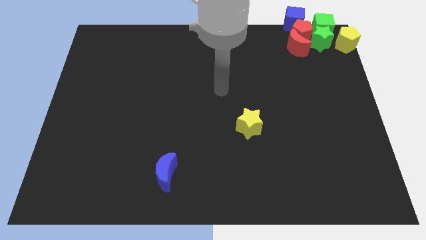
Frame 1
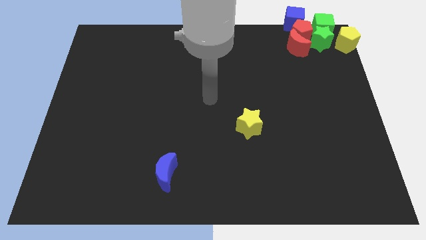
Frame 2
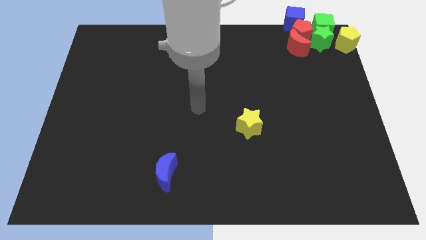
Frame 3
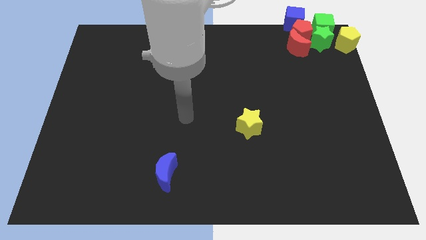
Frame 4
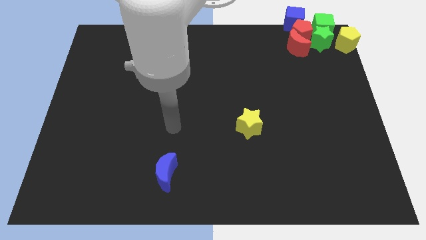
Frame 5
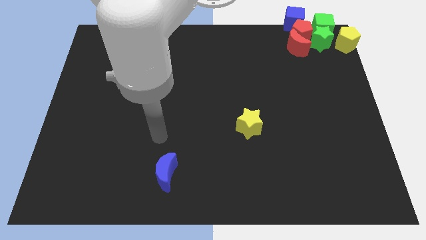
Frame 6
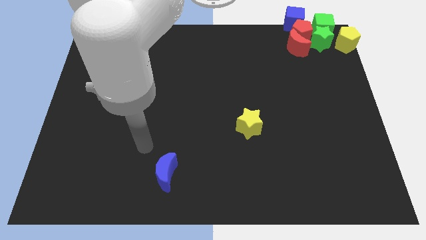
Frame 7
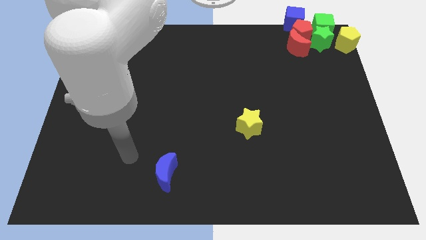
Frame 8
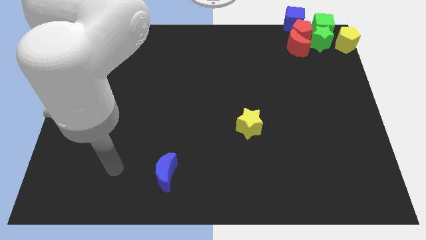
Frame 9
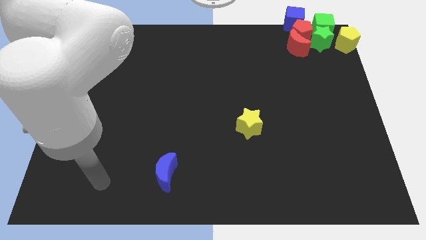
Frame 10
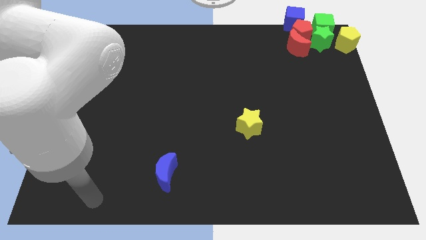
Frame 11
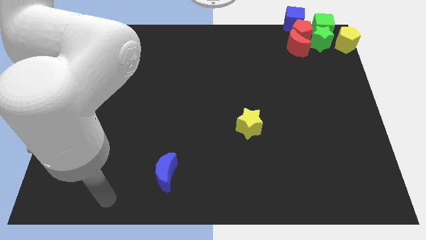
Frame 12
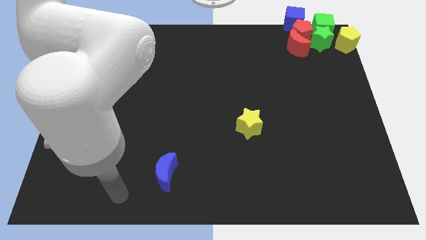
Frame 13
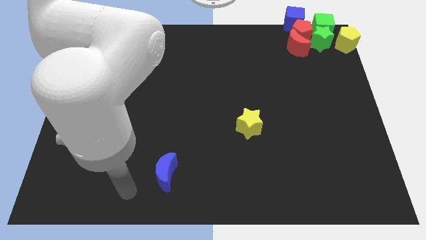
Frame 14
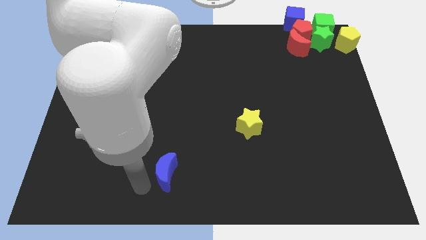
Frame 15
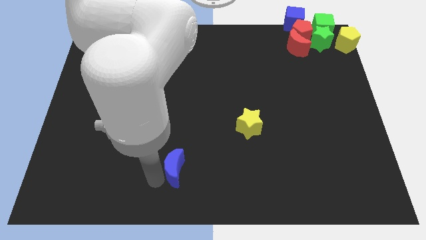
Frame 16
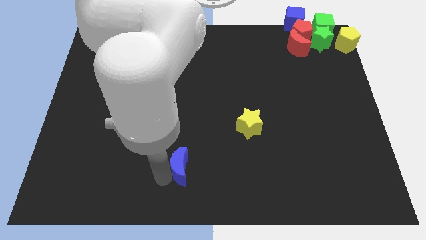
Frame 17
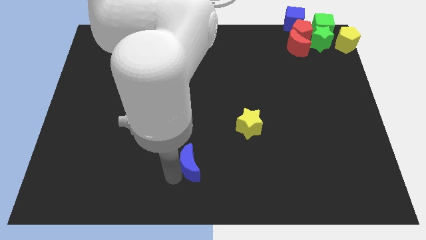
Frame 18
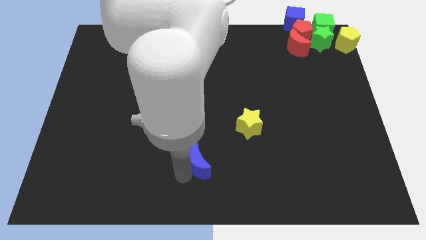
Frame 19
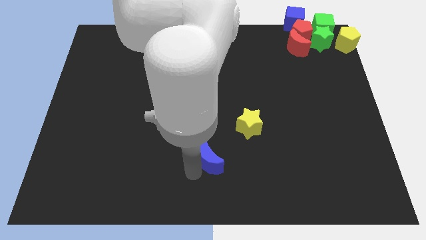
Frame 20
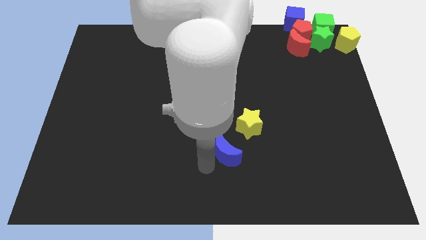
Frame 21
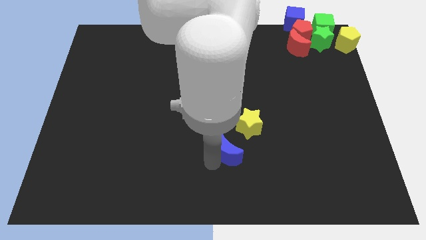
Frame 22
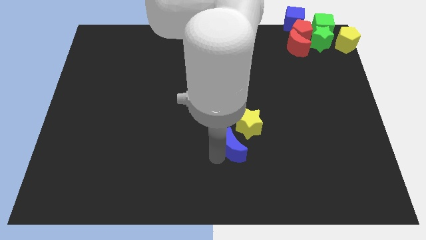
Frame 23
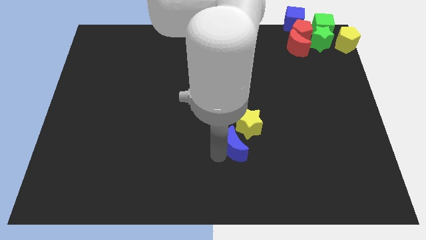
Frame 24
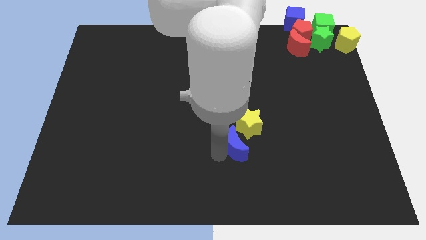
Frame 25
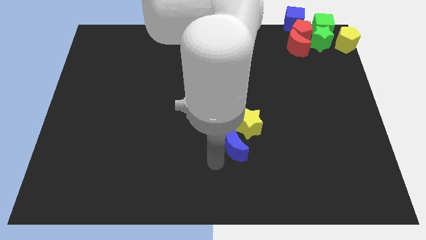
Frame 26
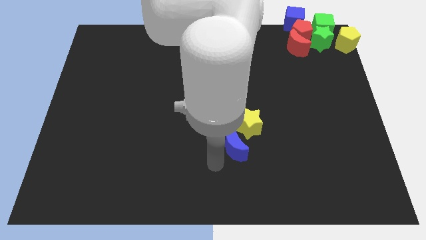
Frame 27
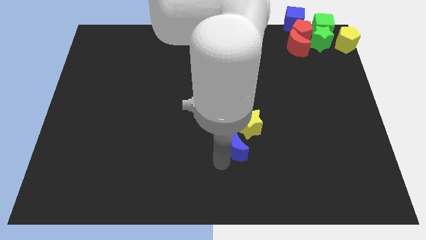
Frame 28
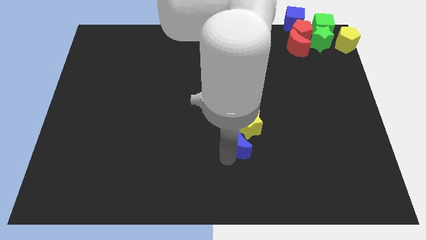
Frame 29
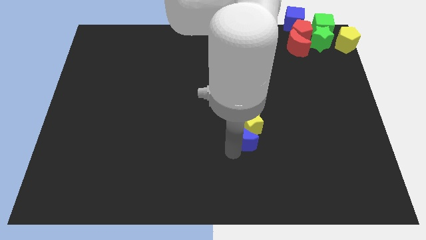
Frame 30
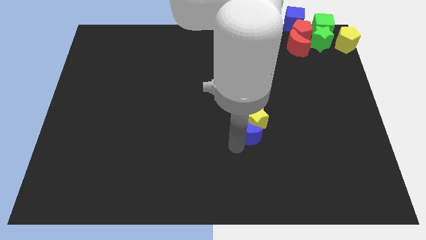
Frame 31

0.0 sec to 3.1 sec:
move the blue crescent to the bottom left of the yellow star

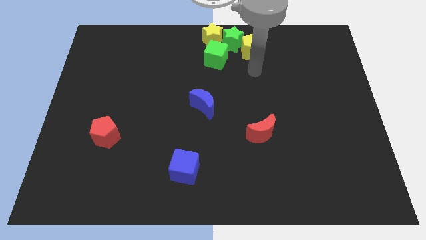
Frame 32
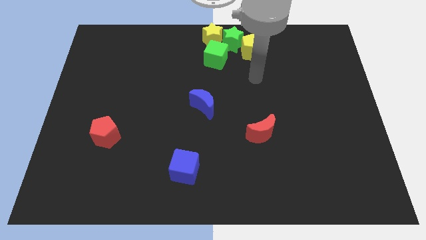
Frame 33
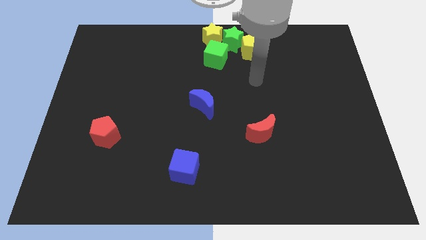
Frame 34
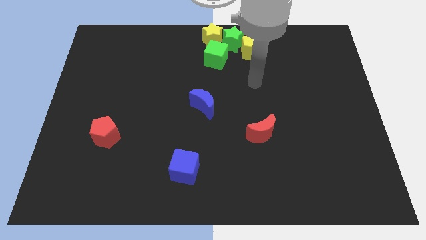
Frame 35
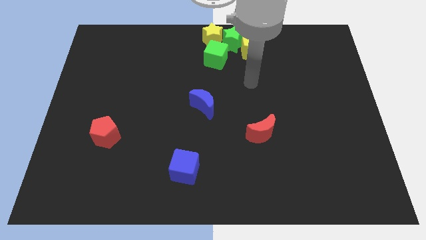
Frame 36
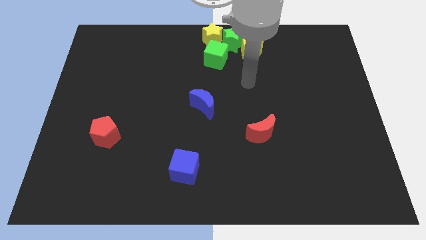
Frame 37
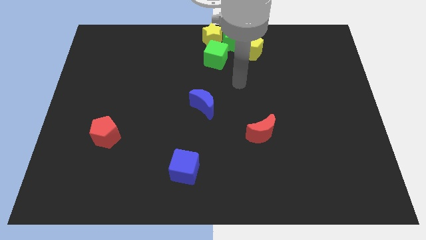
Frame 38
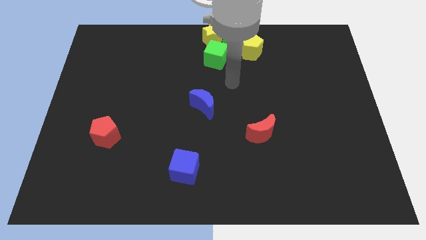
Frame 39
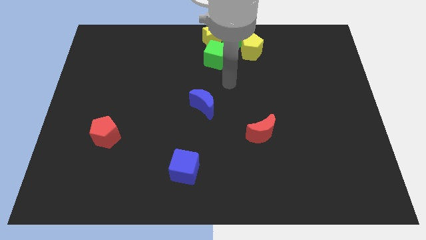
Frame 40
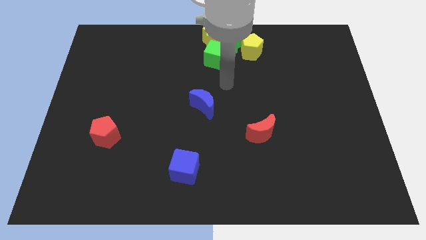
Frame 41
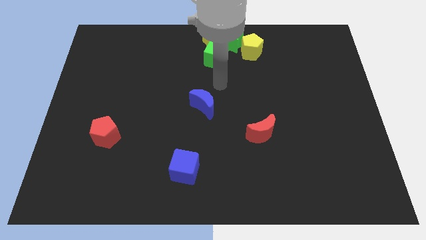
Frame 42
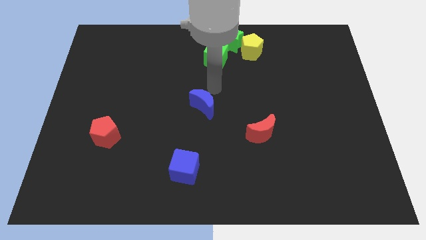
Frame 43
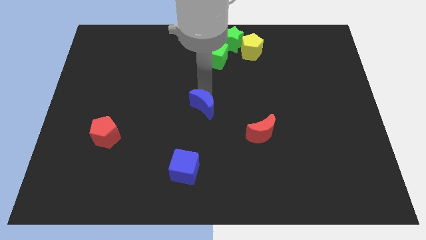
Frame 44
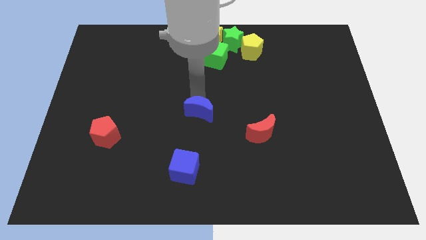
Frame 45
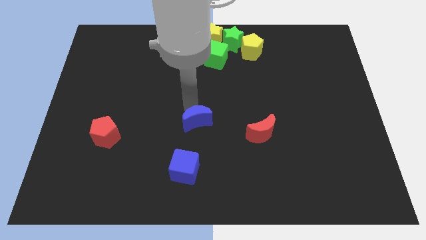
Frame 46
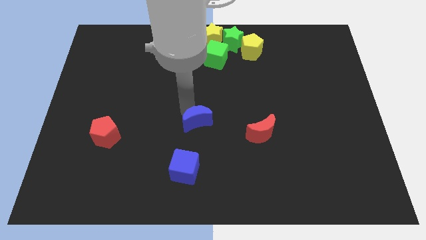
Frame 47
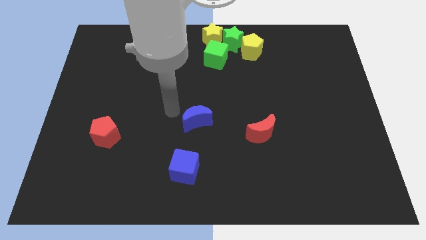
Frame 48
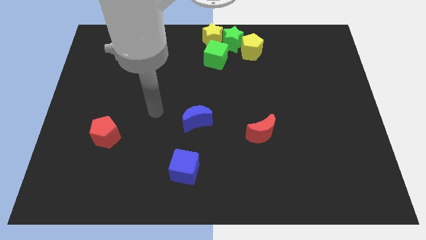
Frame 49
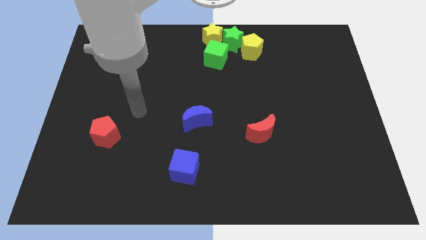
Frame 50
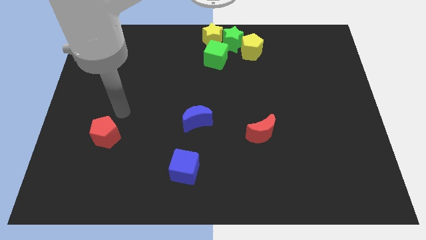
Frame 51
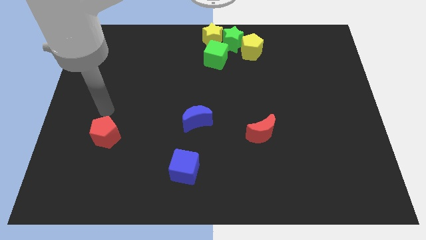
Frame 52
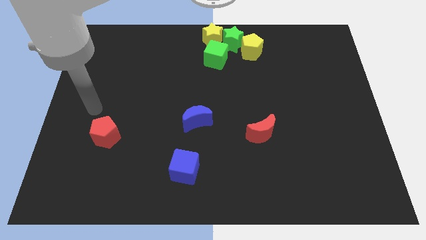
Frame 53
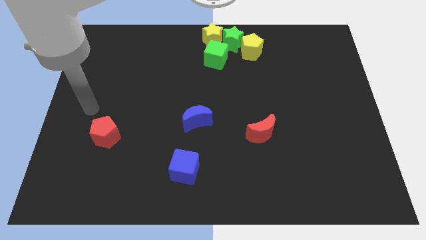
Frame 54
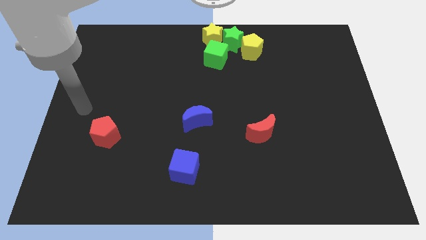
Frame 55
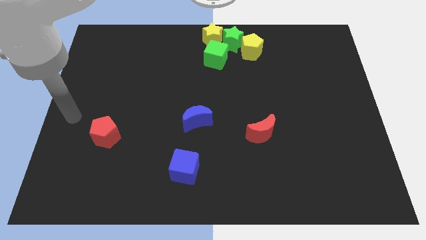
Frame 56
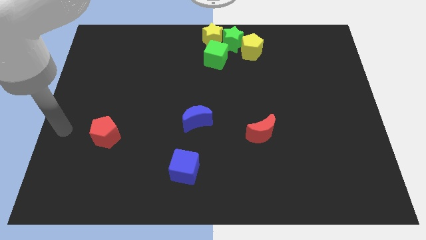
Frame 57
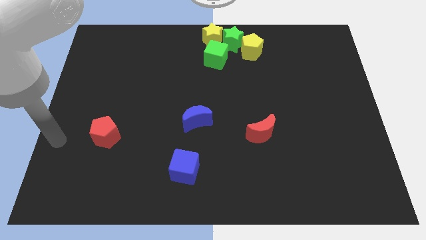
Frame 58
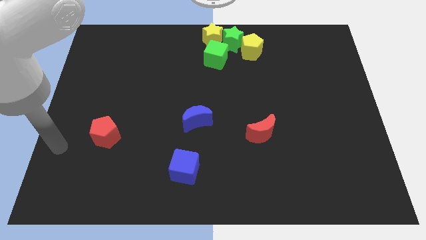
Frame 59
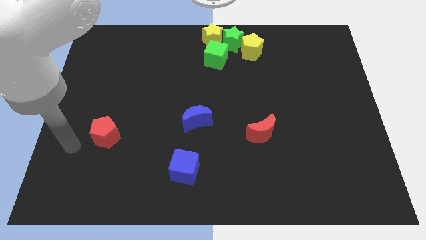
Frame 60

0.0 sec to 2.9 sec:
push the blue crescent slightly to the center of the board

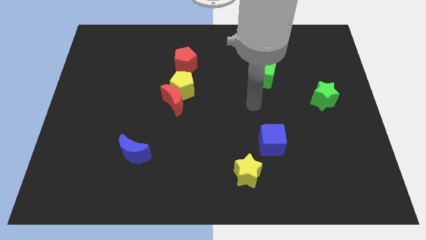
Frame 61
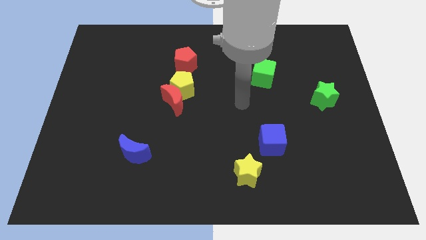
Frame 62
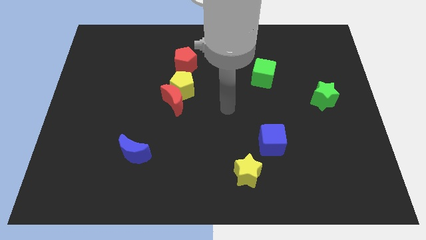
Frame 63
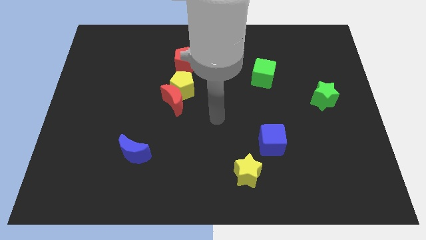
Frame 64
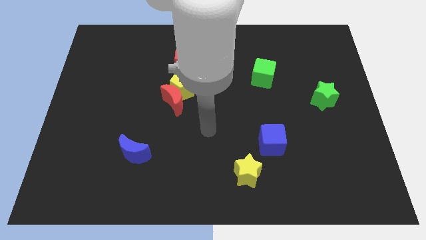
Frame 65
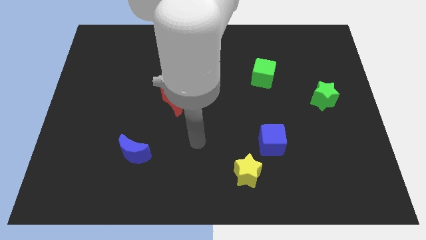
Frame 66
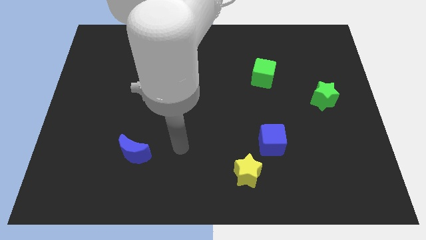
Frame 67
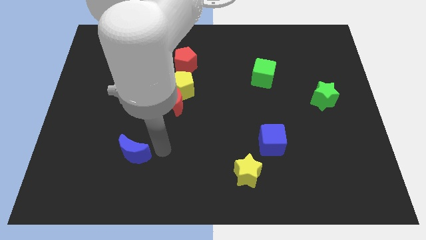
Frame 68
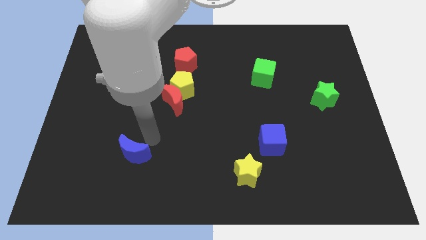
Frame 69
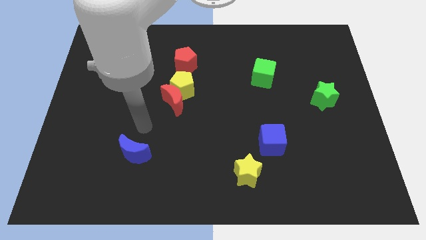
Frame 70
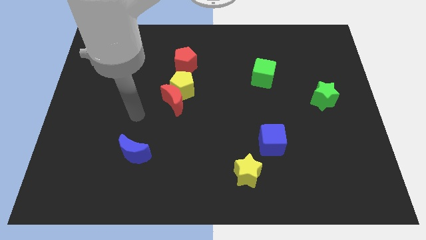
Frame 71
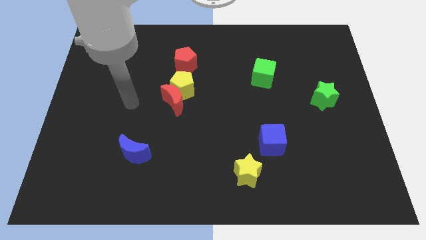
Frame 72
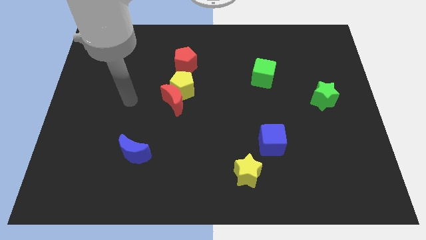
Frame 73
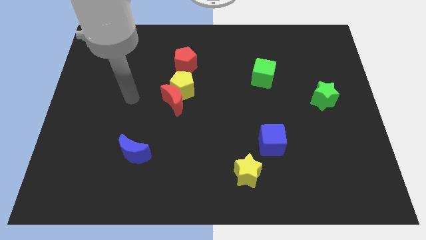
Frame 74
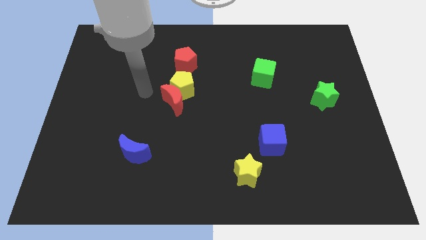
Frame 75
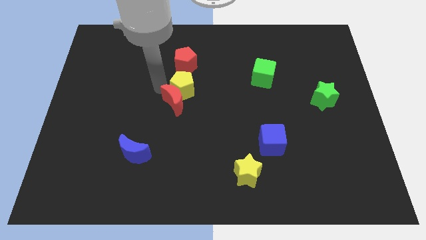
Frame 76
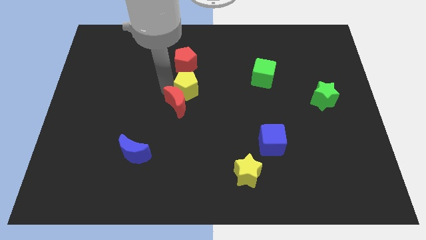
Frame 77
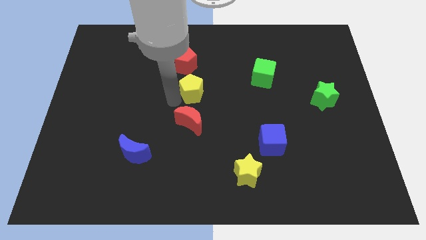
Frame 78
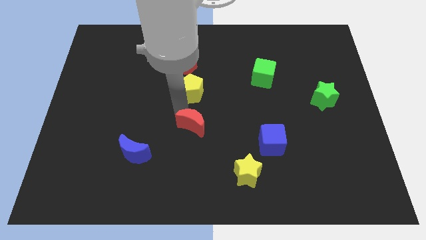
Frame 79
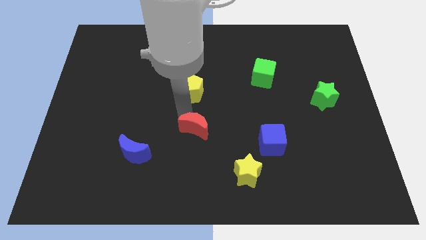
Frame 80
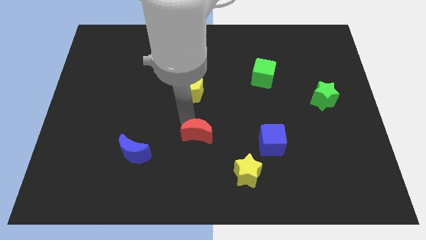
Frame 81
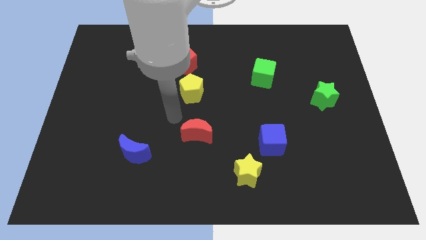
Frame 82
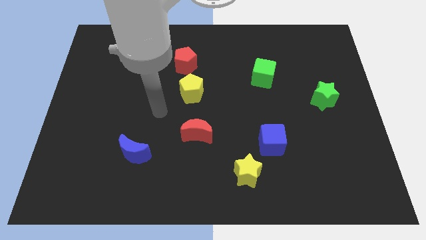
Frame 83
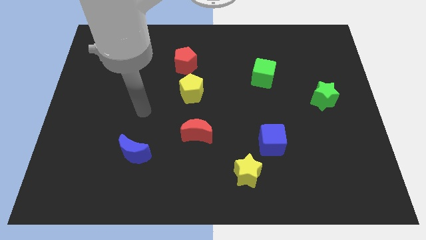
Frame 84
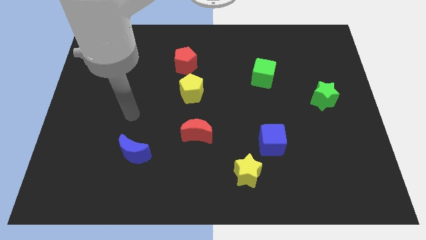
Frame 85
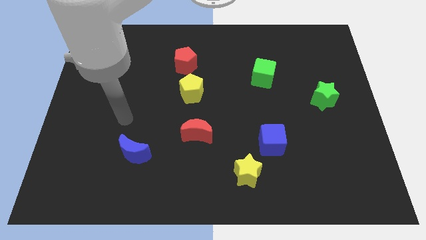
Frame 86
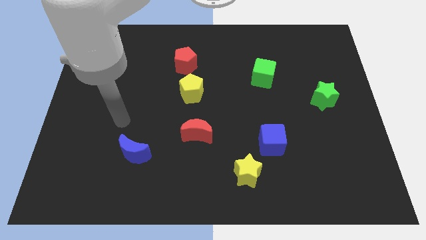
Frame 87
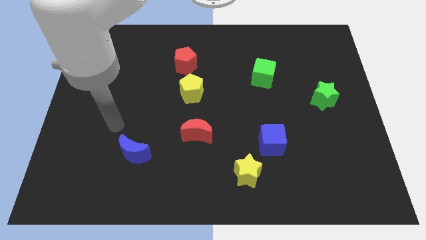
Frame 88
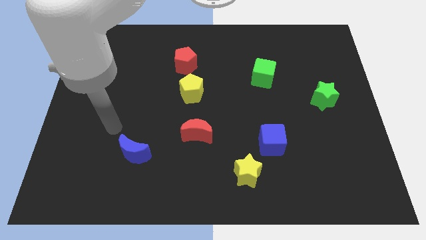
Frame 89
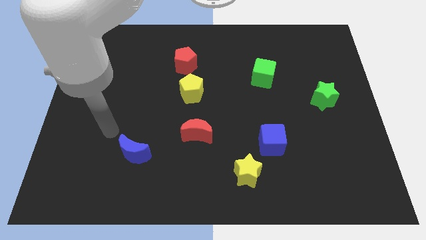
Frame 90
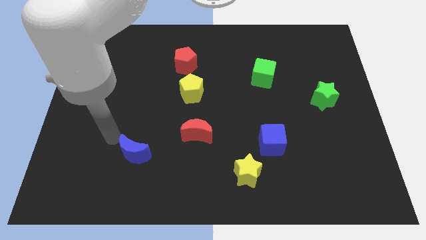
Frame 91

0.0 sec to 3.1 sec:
place the red crescent to the left of the blue cube

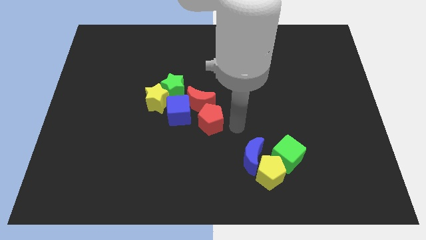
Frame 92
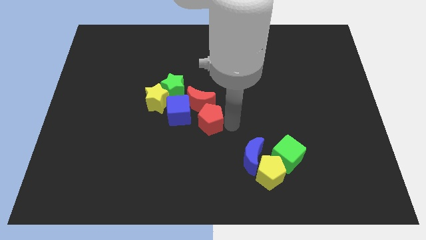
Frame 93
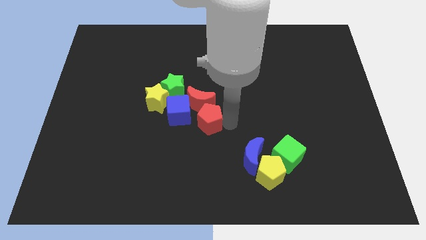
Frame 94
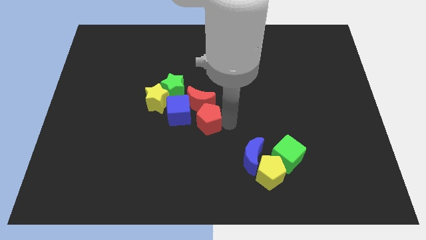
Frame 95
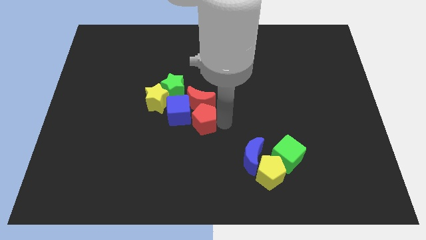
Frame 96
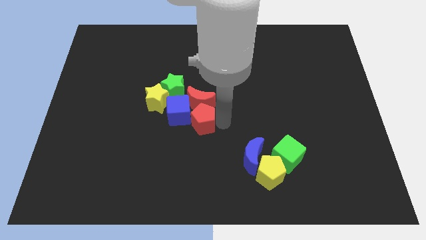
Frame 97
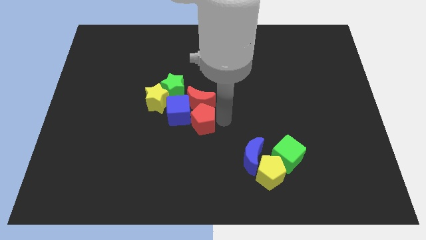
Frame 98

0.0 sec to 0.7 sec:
push the red pentagon close to the blue cube
